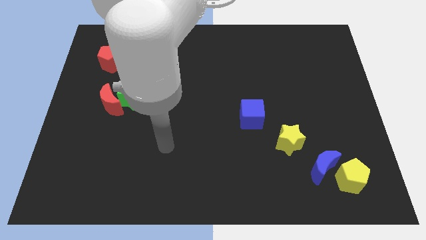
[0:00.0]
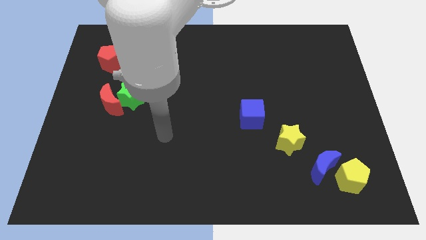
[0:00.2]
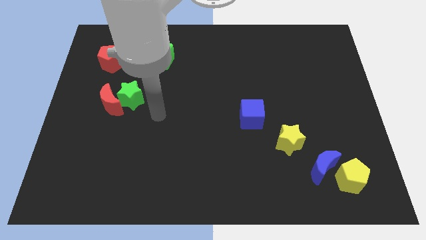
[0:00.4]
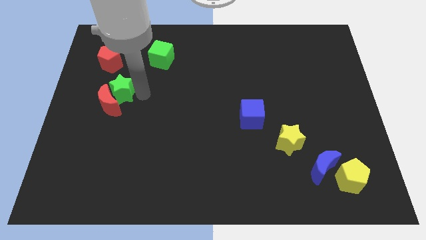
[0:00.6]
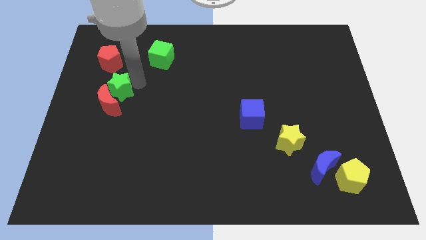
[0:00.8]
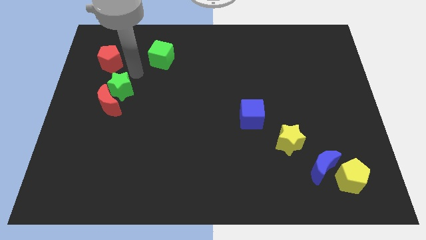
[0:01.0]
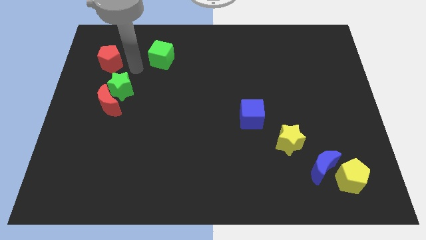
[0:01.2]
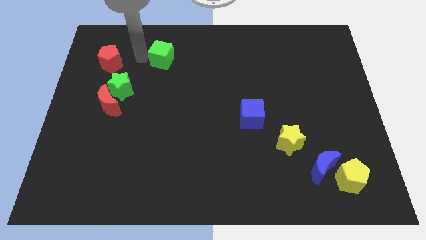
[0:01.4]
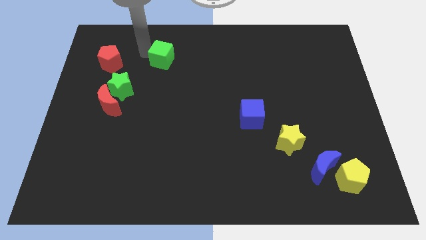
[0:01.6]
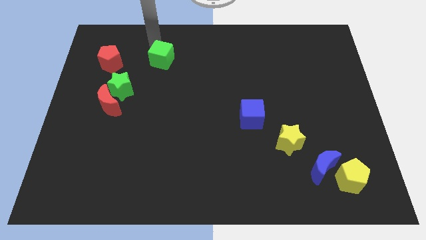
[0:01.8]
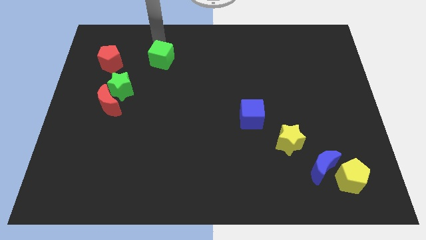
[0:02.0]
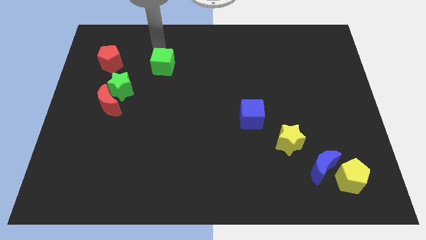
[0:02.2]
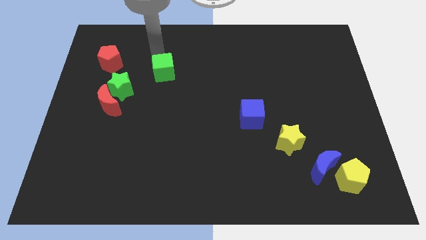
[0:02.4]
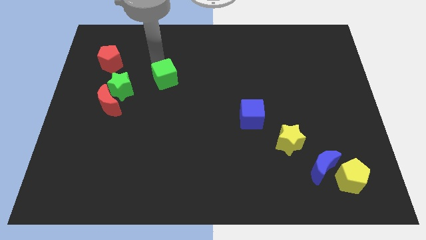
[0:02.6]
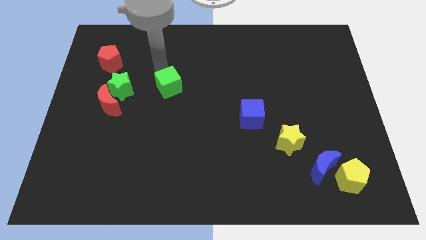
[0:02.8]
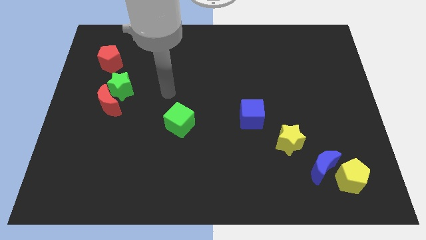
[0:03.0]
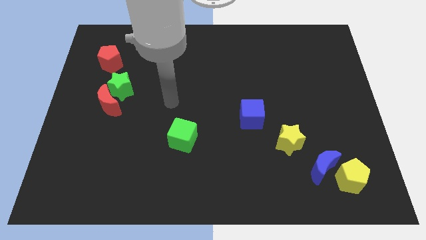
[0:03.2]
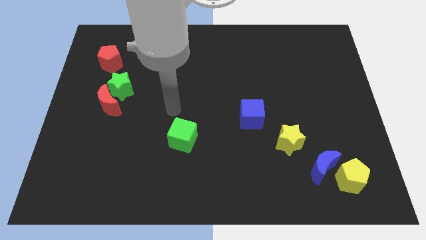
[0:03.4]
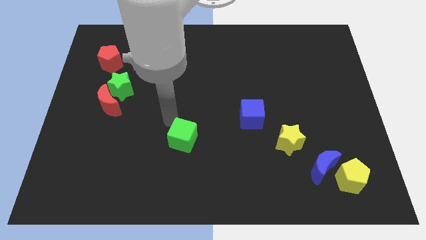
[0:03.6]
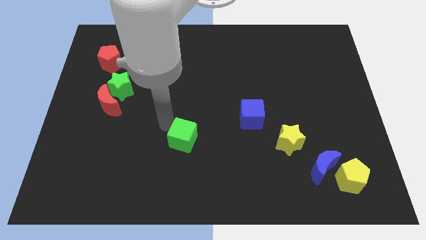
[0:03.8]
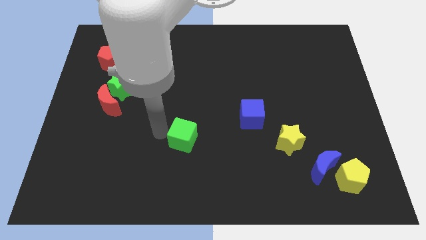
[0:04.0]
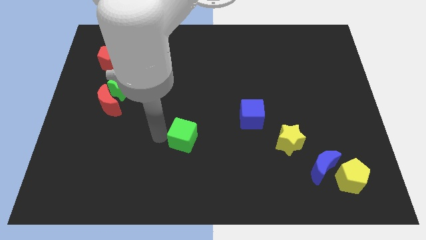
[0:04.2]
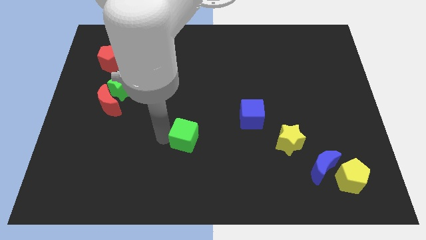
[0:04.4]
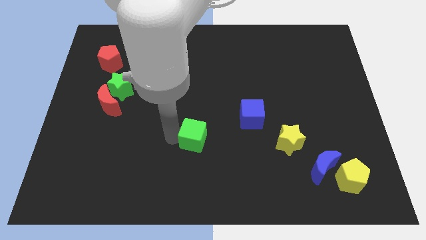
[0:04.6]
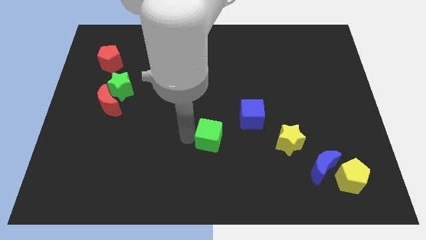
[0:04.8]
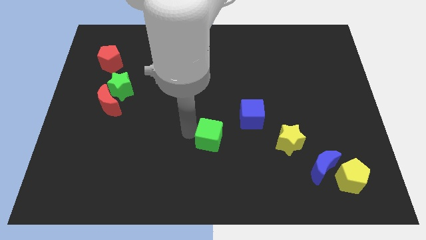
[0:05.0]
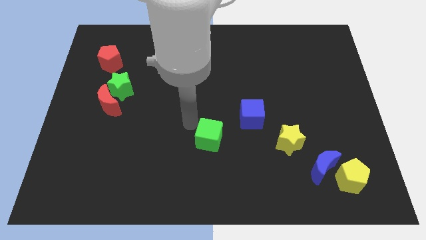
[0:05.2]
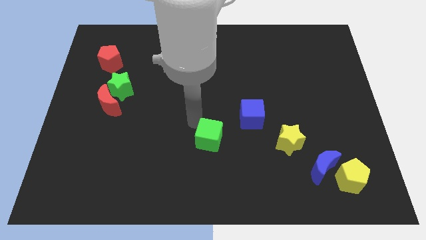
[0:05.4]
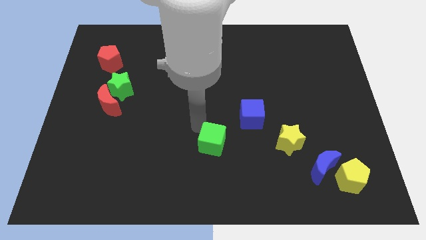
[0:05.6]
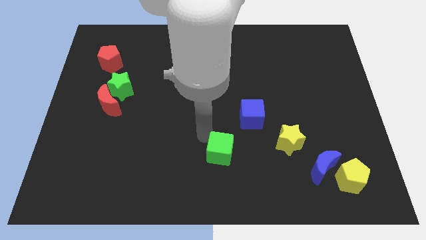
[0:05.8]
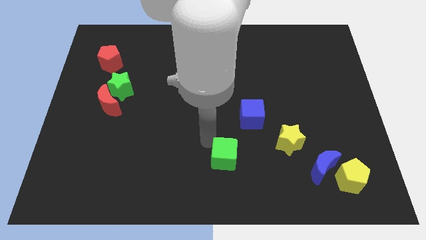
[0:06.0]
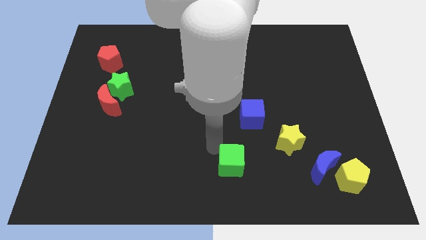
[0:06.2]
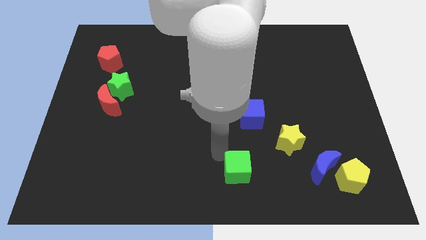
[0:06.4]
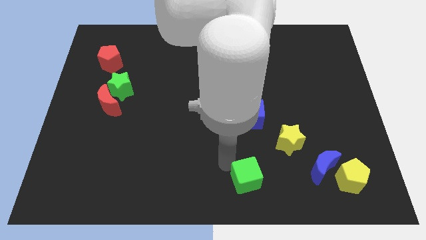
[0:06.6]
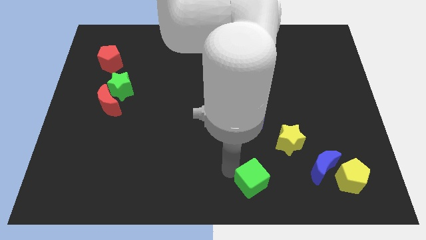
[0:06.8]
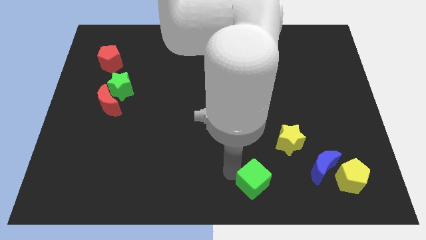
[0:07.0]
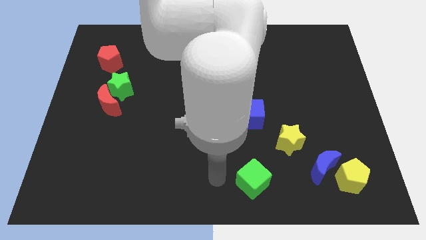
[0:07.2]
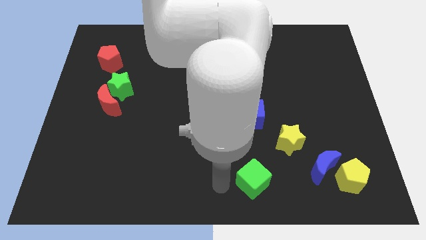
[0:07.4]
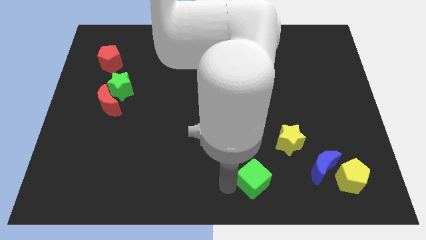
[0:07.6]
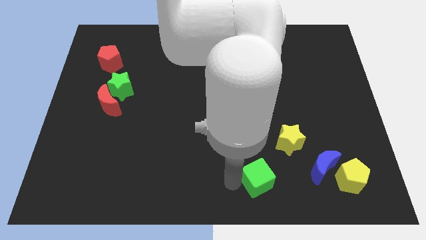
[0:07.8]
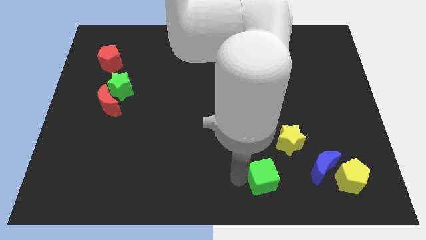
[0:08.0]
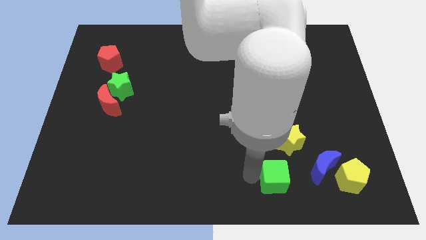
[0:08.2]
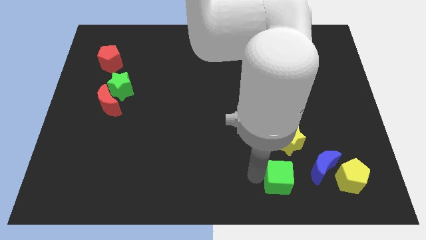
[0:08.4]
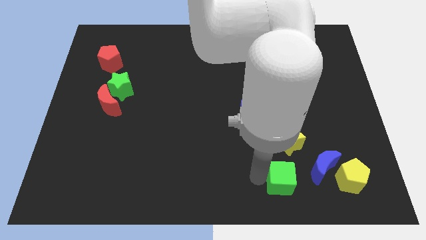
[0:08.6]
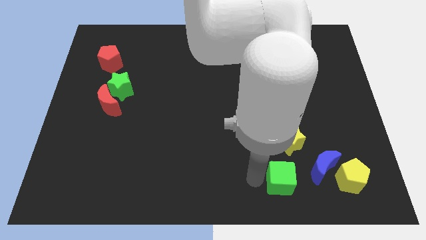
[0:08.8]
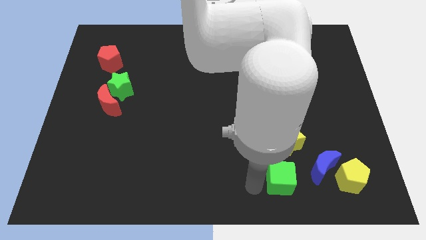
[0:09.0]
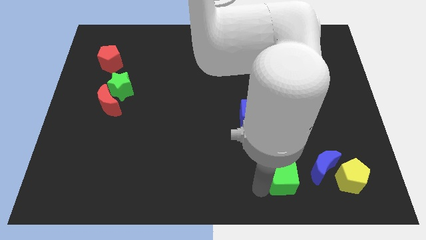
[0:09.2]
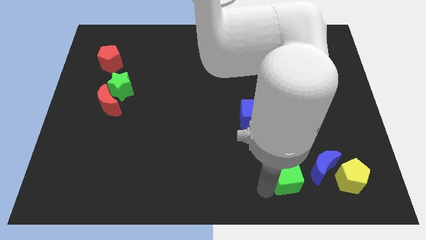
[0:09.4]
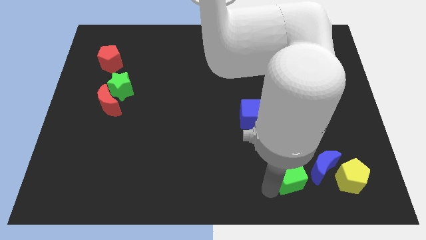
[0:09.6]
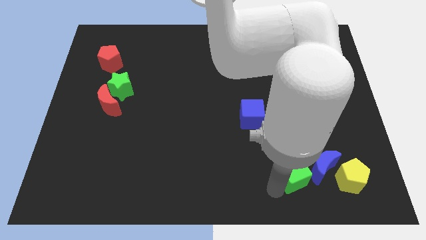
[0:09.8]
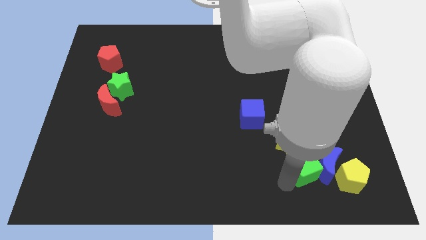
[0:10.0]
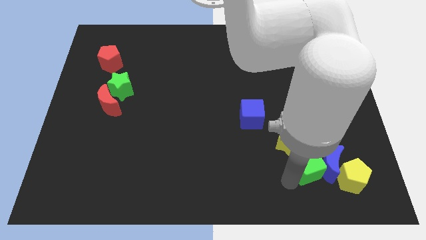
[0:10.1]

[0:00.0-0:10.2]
slide the green cube towards the blue moon

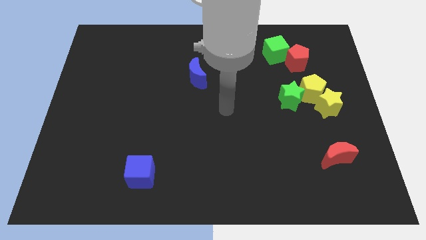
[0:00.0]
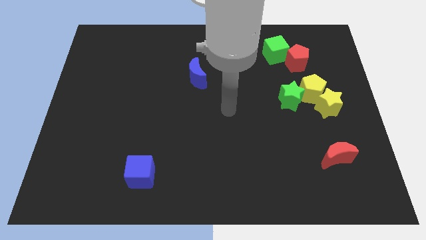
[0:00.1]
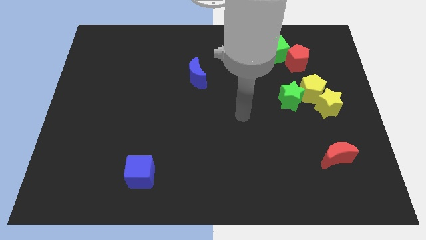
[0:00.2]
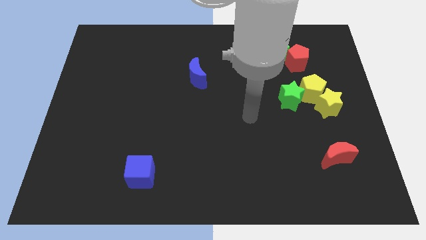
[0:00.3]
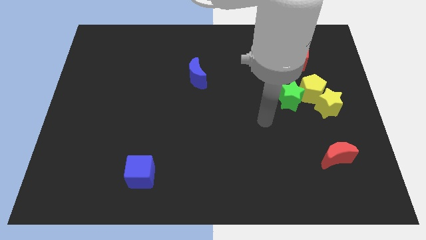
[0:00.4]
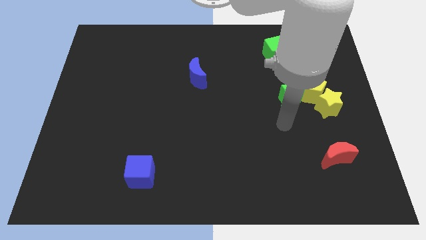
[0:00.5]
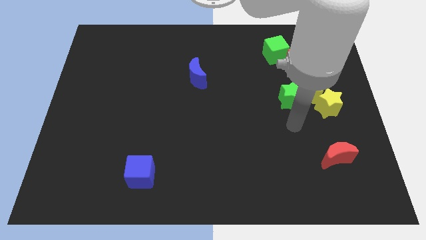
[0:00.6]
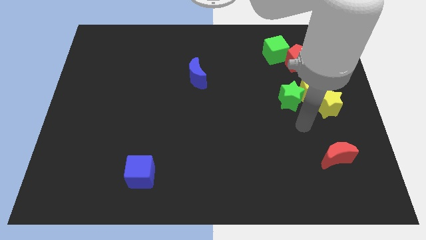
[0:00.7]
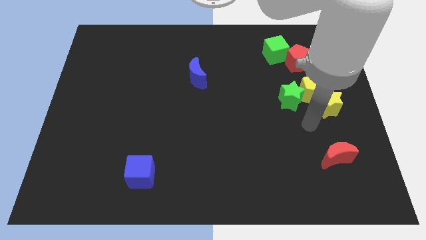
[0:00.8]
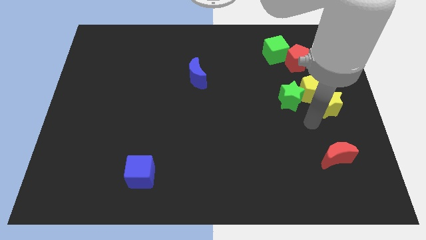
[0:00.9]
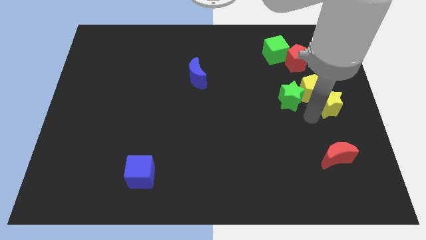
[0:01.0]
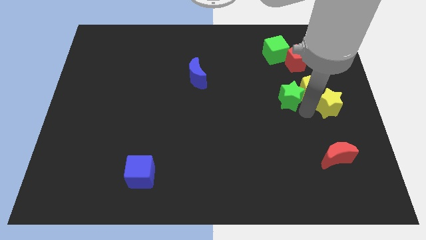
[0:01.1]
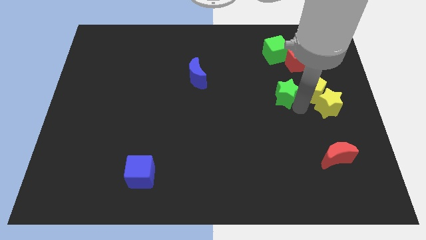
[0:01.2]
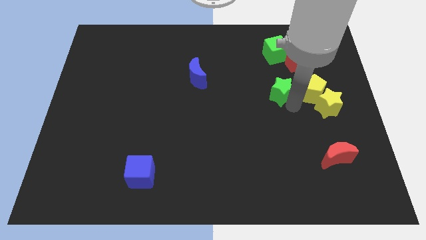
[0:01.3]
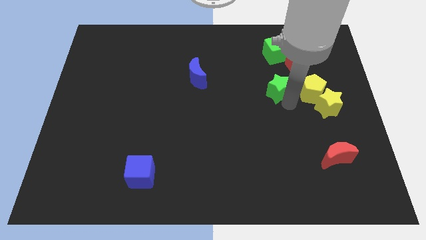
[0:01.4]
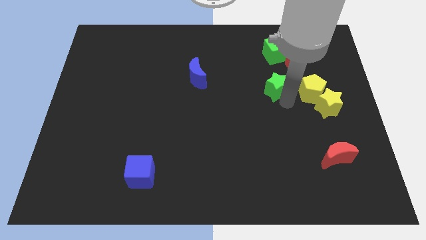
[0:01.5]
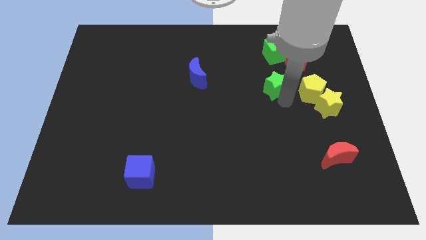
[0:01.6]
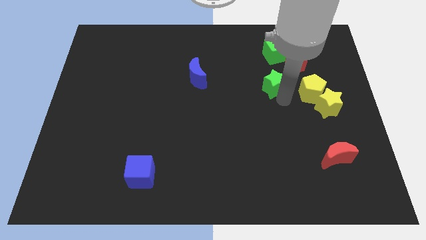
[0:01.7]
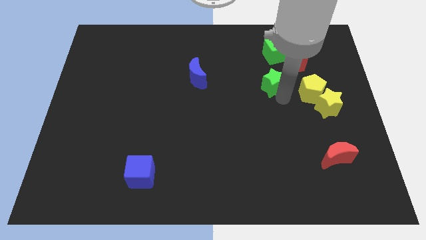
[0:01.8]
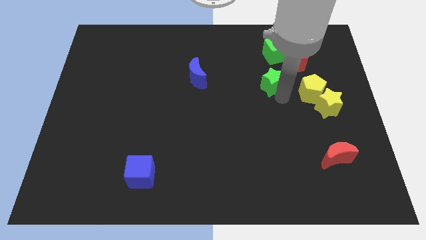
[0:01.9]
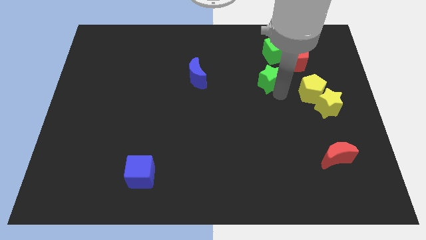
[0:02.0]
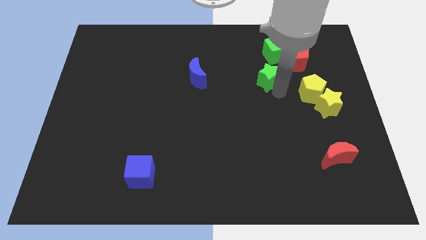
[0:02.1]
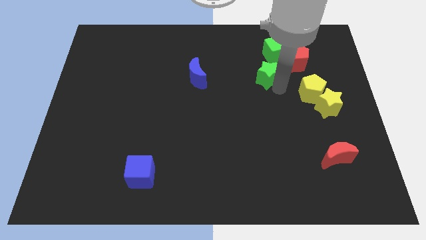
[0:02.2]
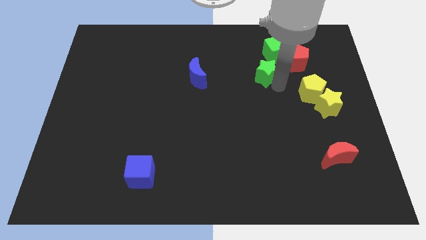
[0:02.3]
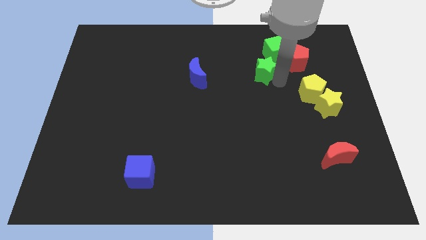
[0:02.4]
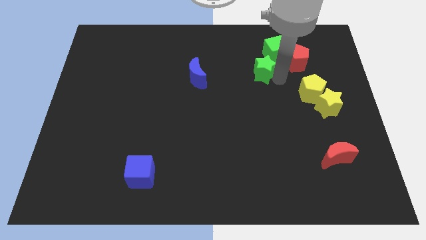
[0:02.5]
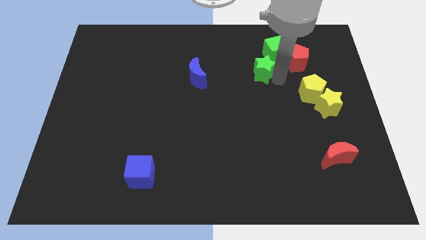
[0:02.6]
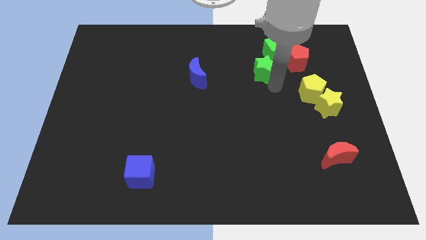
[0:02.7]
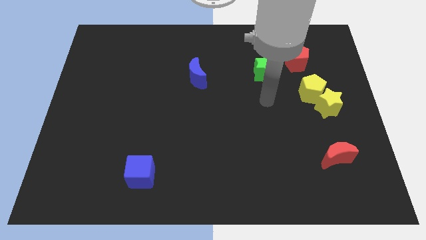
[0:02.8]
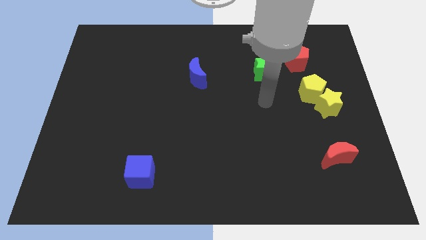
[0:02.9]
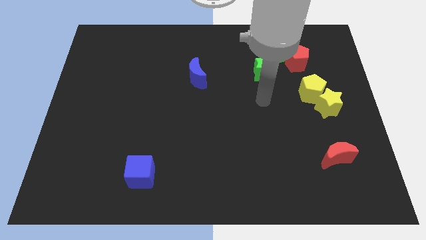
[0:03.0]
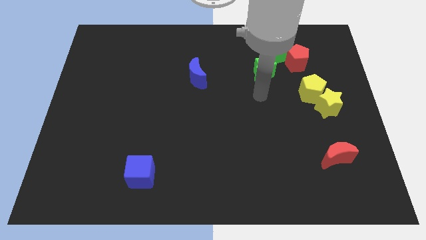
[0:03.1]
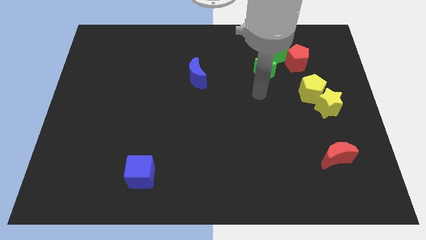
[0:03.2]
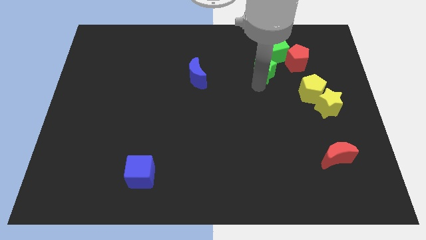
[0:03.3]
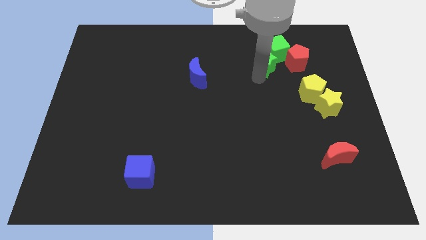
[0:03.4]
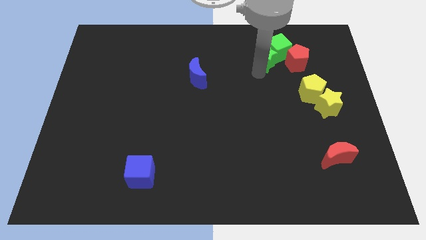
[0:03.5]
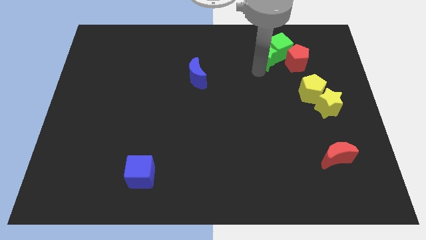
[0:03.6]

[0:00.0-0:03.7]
slide the green star towards the green cube
